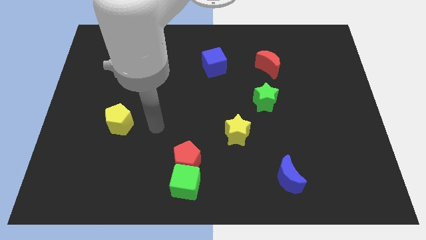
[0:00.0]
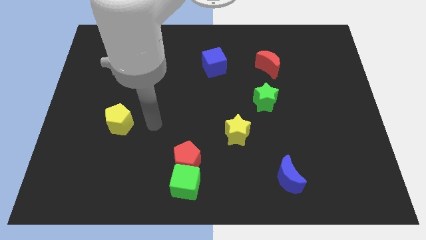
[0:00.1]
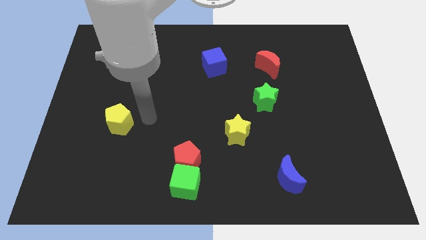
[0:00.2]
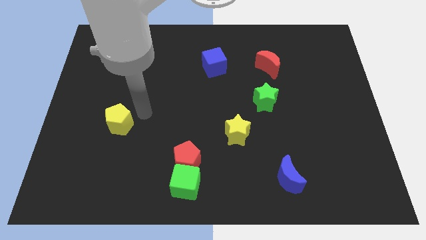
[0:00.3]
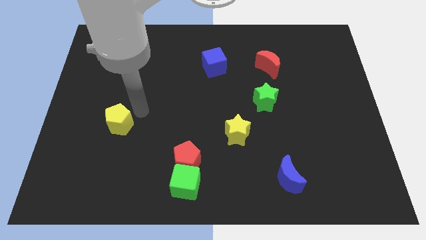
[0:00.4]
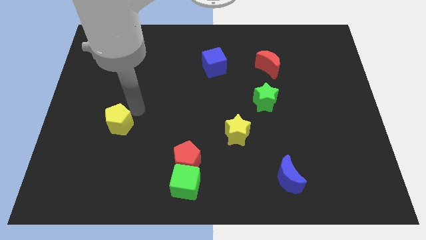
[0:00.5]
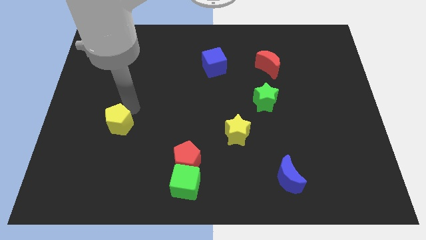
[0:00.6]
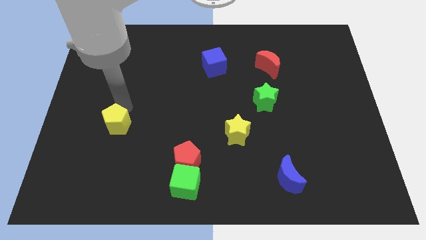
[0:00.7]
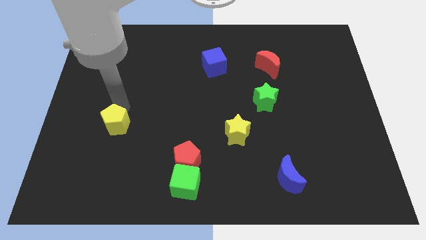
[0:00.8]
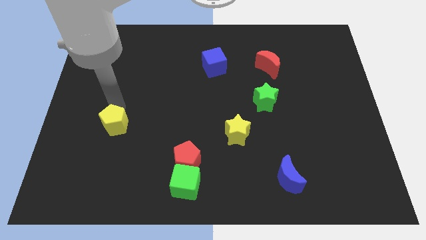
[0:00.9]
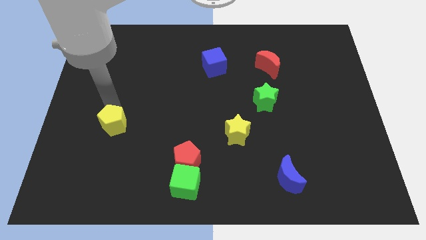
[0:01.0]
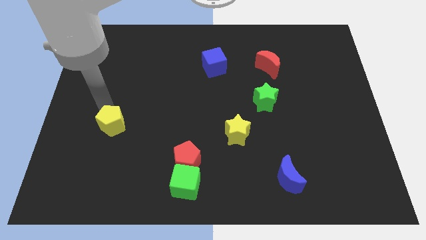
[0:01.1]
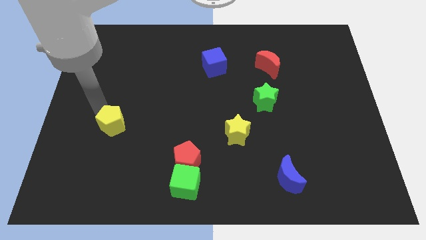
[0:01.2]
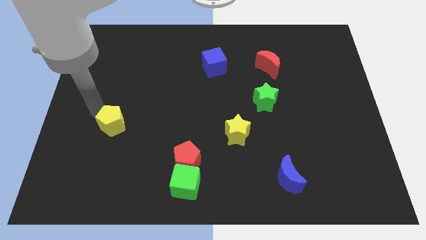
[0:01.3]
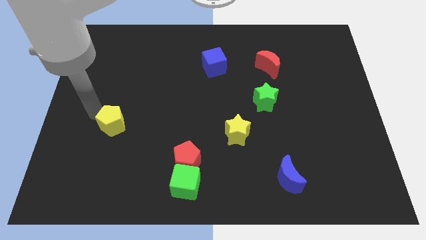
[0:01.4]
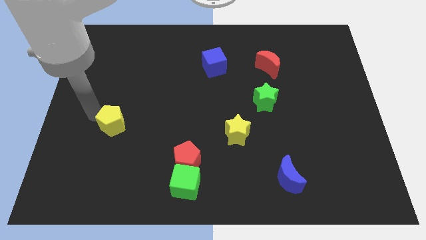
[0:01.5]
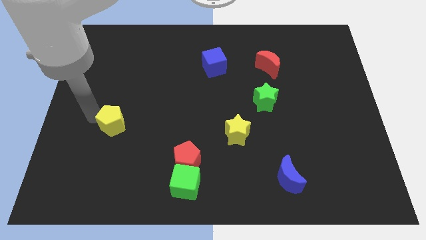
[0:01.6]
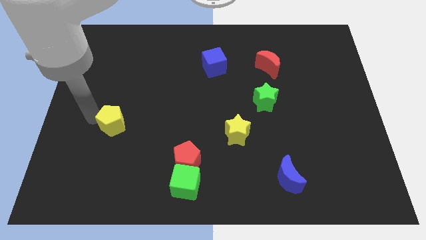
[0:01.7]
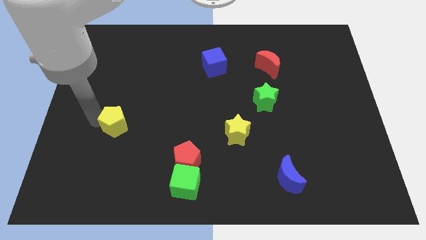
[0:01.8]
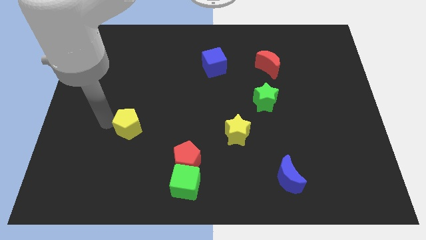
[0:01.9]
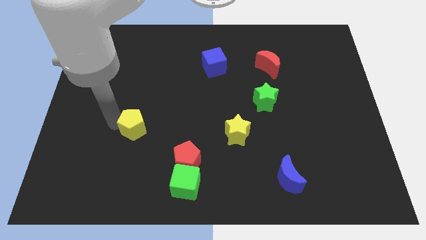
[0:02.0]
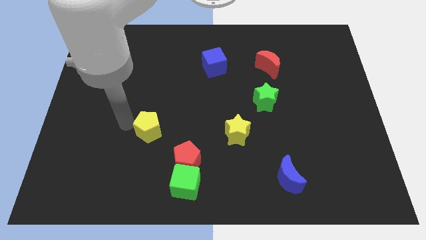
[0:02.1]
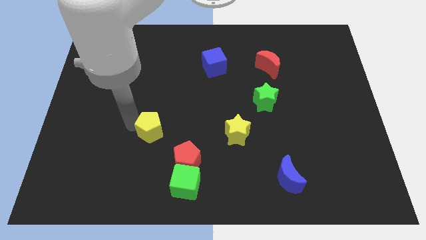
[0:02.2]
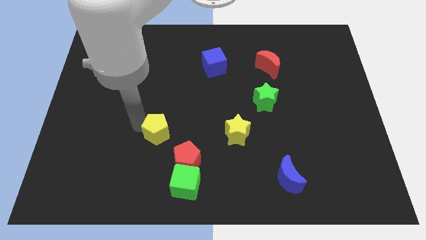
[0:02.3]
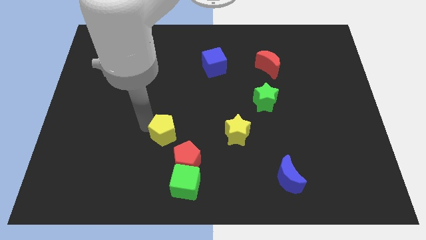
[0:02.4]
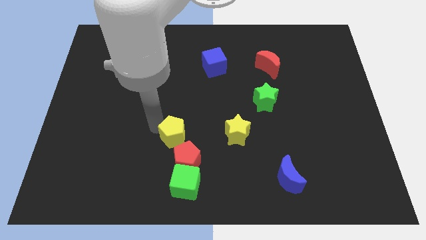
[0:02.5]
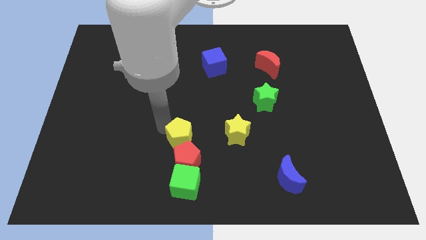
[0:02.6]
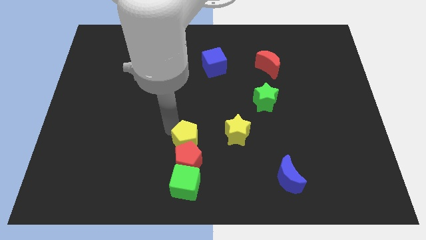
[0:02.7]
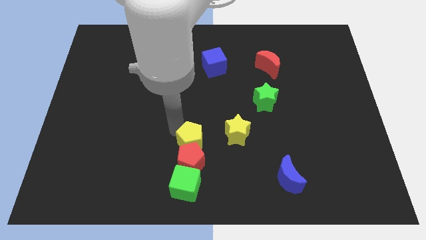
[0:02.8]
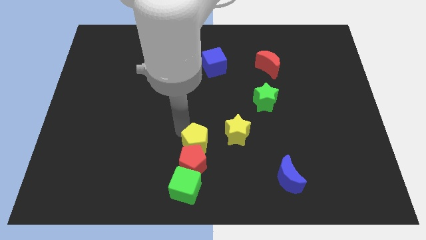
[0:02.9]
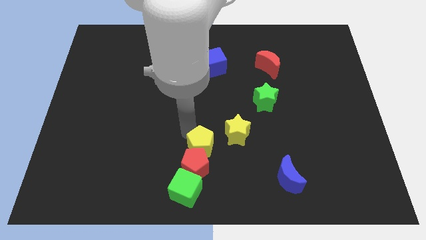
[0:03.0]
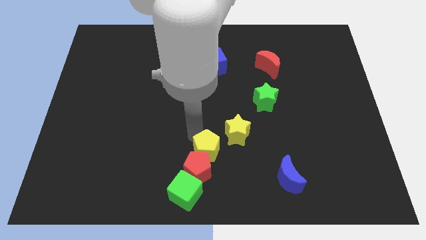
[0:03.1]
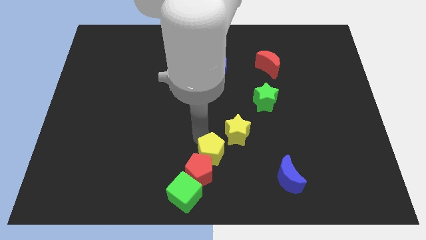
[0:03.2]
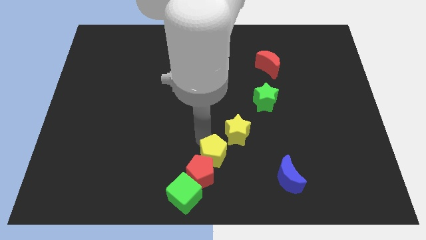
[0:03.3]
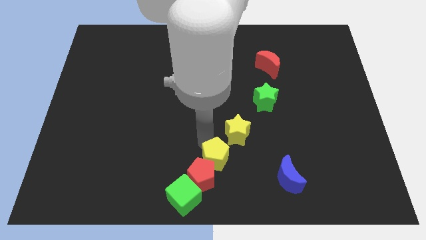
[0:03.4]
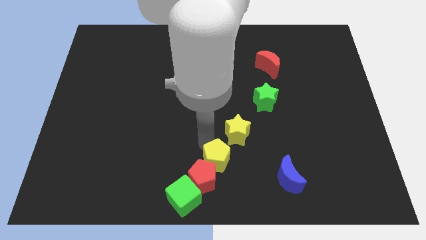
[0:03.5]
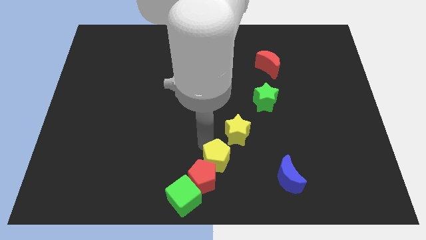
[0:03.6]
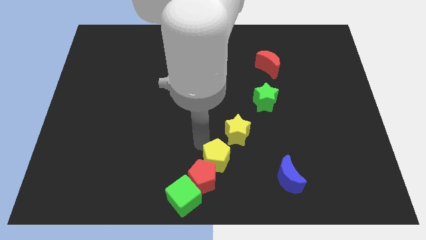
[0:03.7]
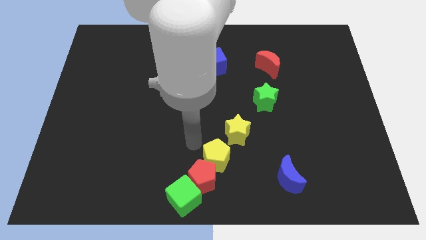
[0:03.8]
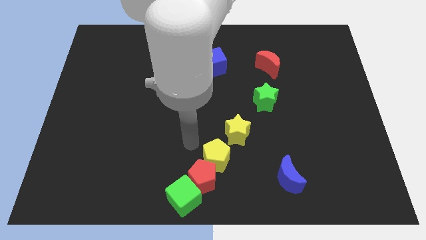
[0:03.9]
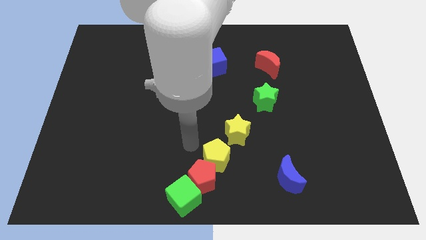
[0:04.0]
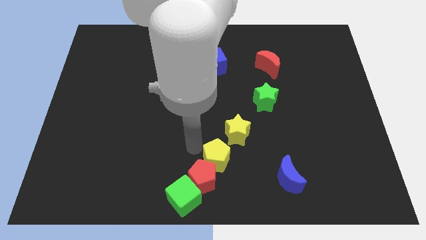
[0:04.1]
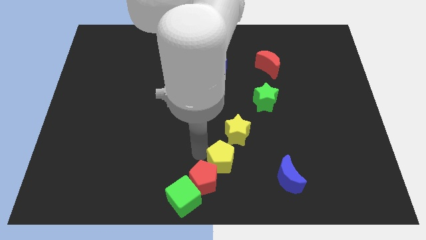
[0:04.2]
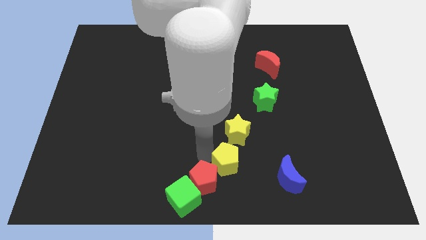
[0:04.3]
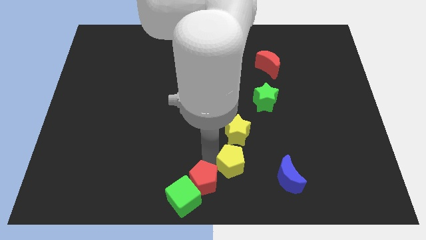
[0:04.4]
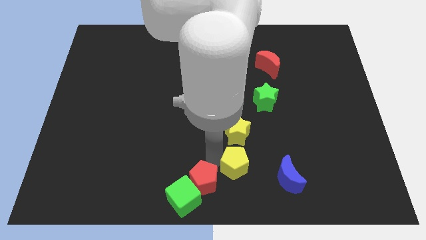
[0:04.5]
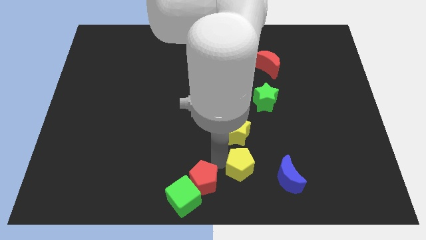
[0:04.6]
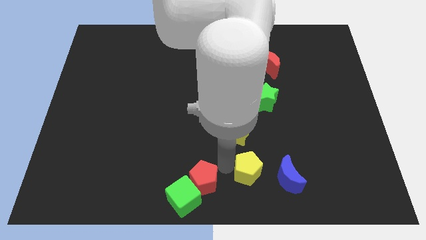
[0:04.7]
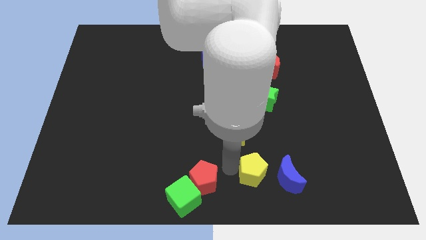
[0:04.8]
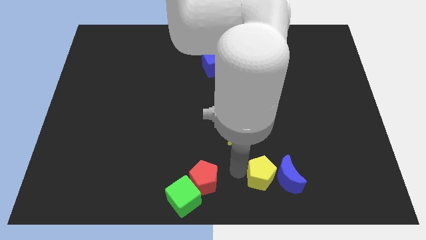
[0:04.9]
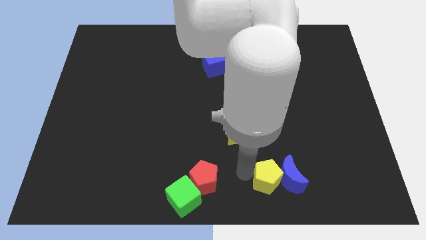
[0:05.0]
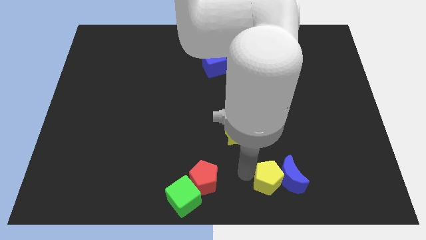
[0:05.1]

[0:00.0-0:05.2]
put the yellow pentagon close to the blue moon

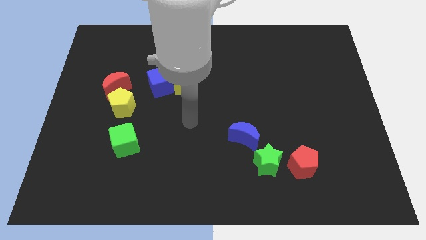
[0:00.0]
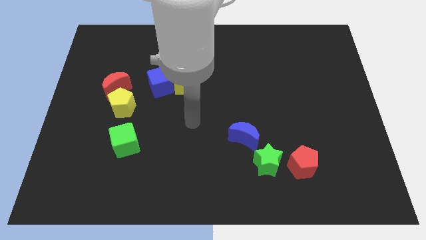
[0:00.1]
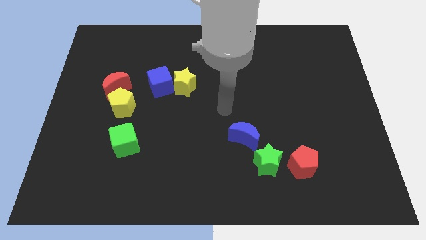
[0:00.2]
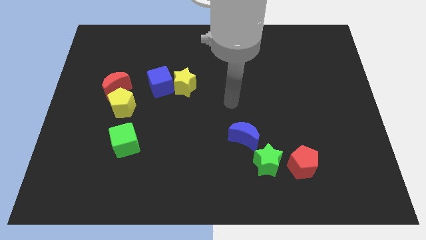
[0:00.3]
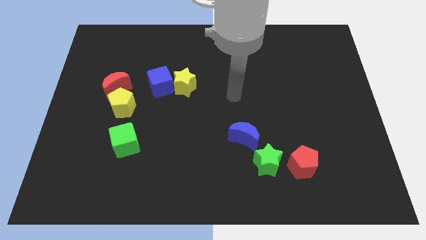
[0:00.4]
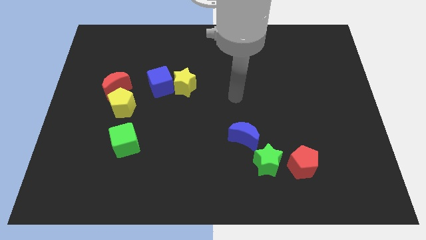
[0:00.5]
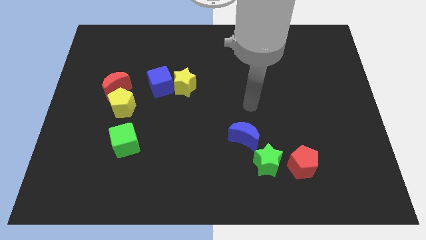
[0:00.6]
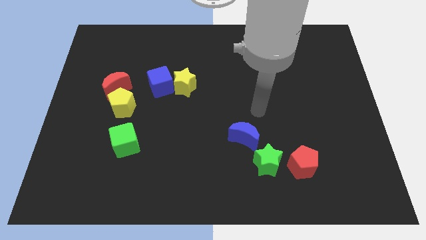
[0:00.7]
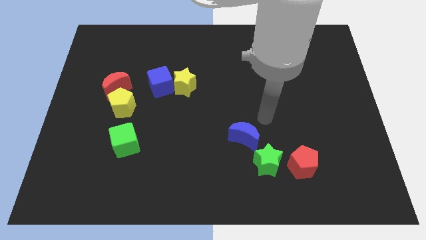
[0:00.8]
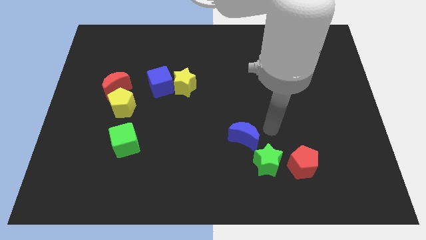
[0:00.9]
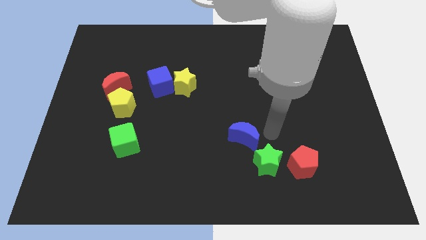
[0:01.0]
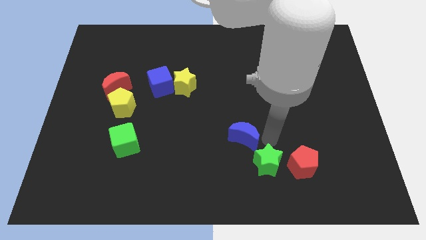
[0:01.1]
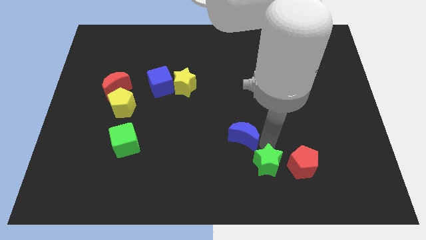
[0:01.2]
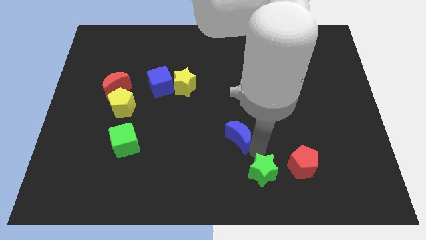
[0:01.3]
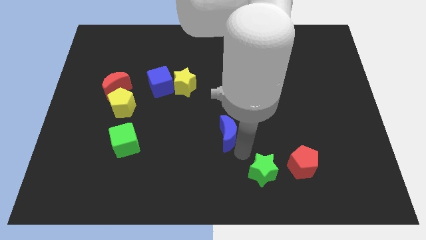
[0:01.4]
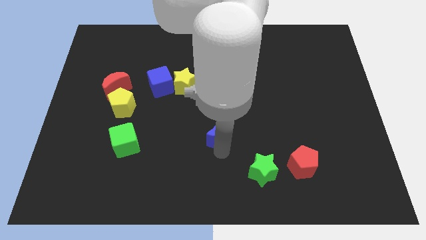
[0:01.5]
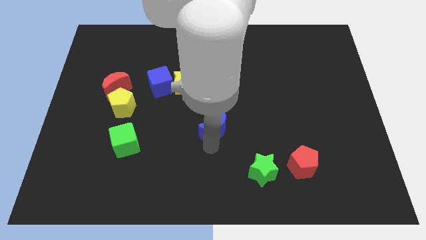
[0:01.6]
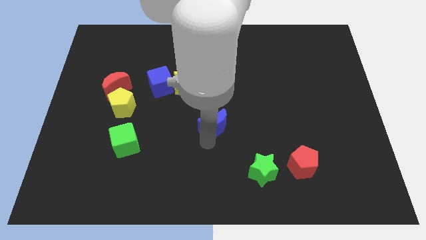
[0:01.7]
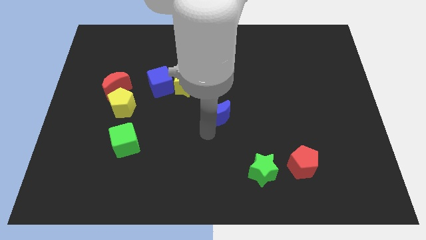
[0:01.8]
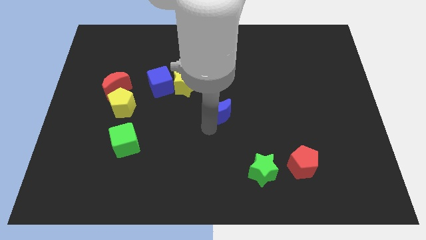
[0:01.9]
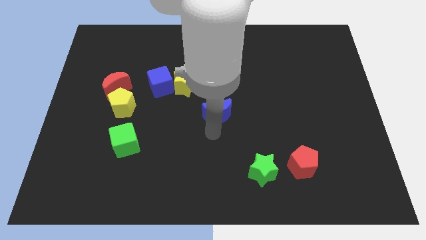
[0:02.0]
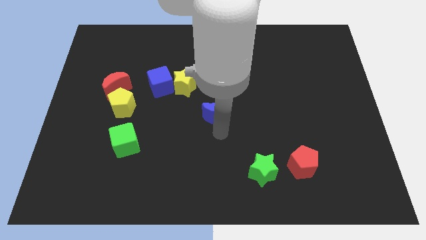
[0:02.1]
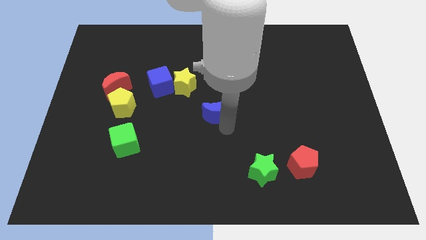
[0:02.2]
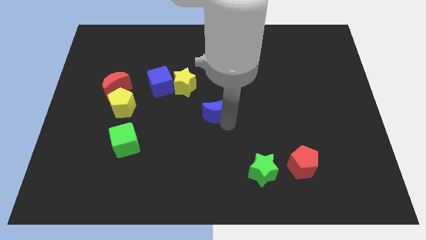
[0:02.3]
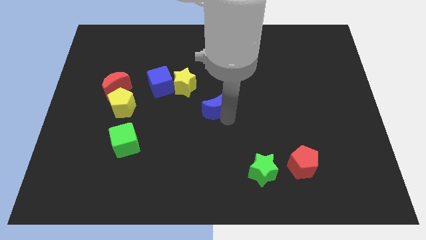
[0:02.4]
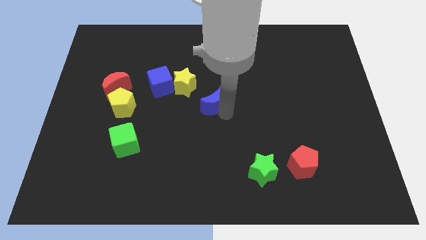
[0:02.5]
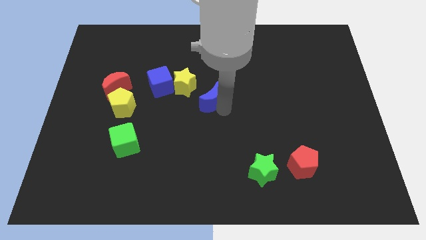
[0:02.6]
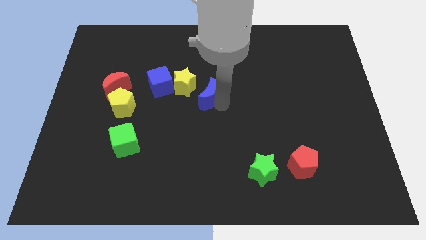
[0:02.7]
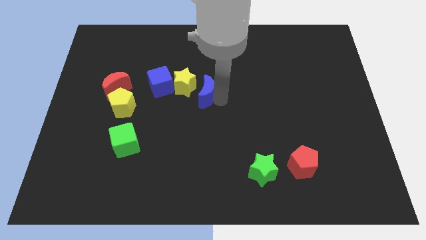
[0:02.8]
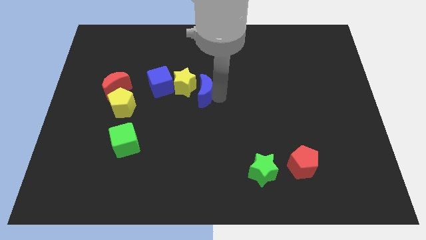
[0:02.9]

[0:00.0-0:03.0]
put the blue moon towards the yellow star

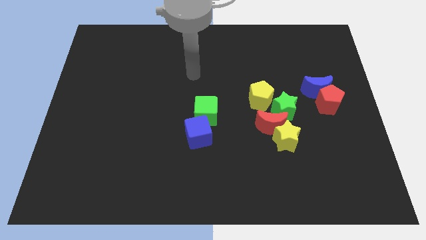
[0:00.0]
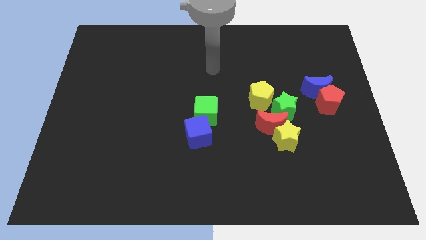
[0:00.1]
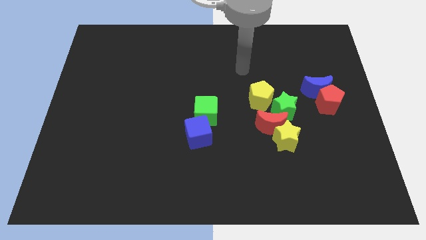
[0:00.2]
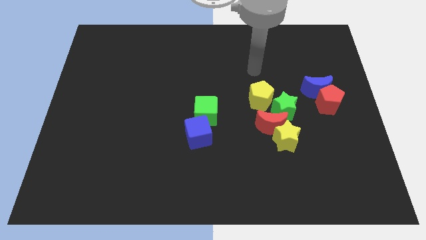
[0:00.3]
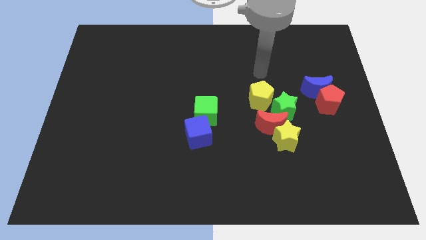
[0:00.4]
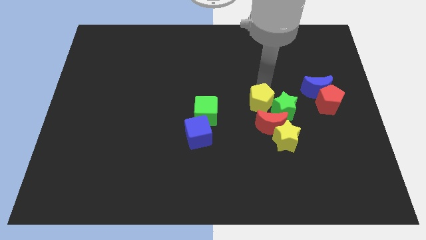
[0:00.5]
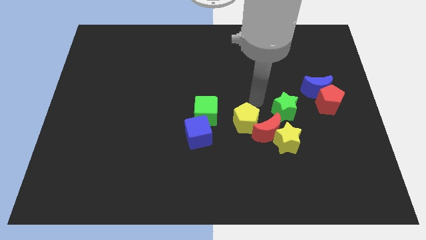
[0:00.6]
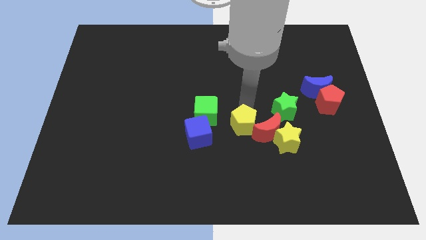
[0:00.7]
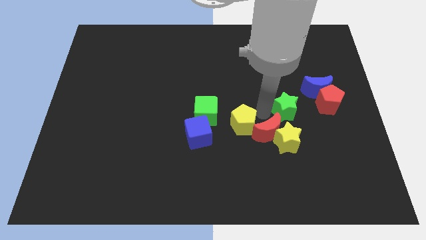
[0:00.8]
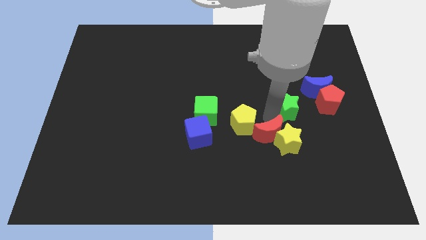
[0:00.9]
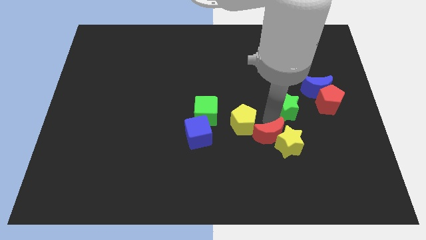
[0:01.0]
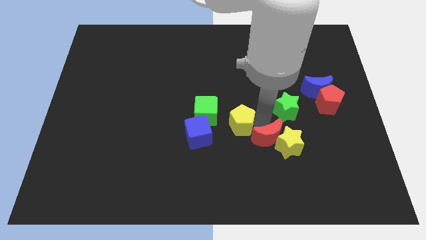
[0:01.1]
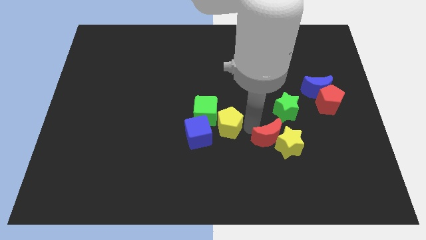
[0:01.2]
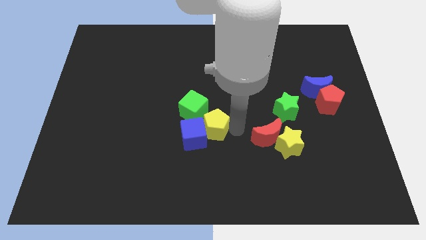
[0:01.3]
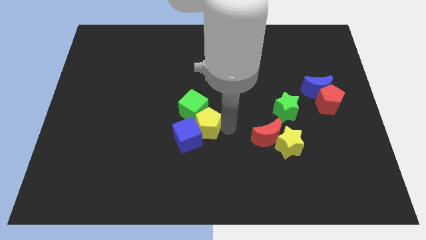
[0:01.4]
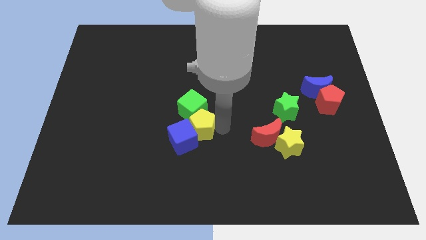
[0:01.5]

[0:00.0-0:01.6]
move the yellow pentagon to the blue cube
